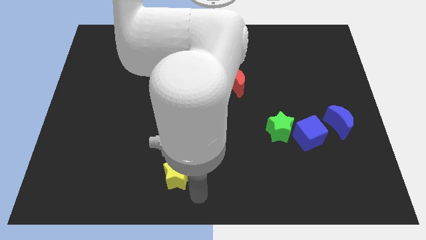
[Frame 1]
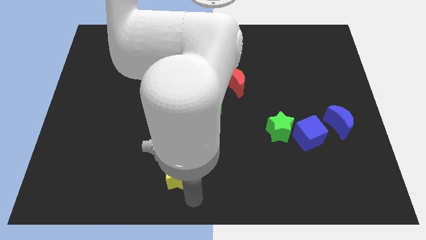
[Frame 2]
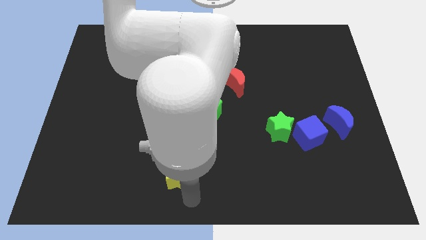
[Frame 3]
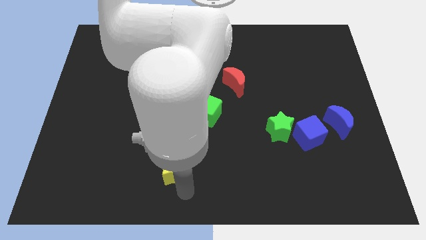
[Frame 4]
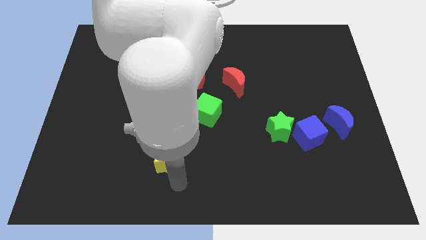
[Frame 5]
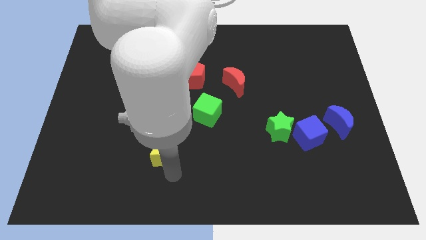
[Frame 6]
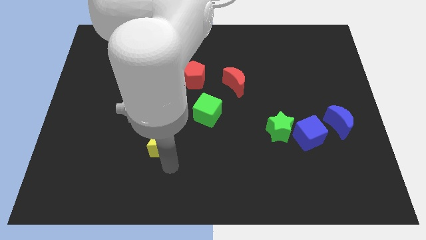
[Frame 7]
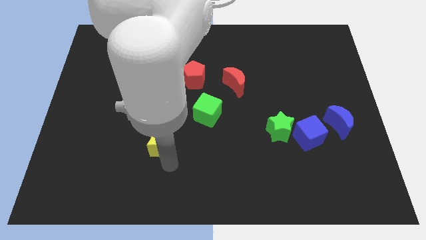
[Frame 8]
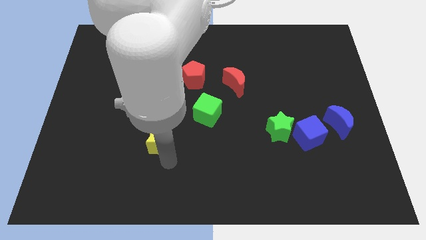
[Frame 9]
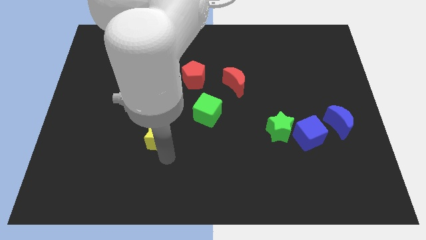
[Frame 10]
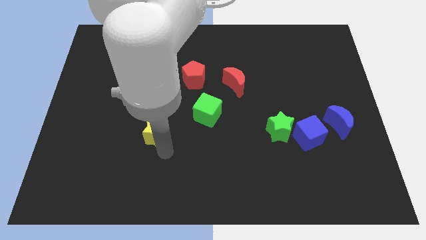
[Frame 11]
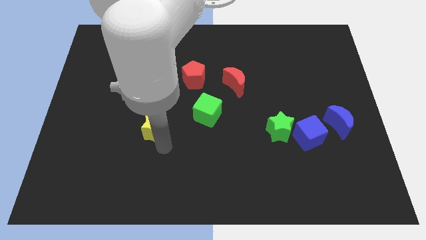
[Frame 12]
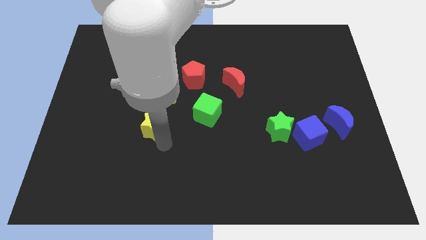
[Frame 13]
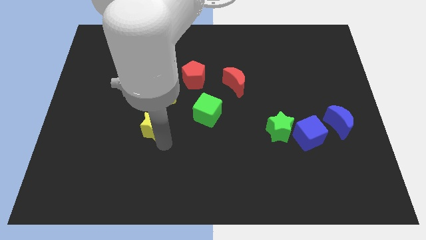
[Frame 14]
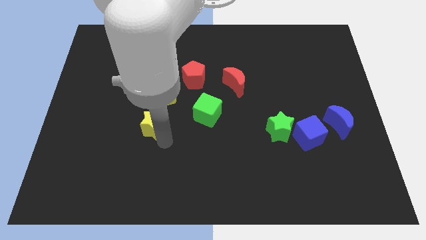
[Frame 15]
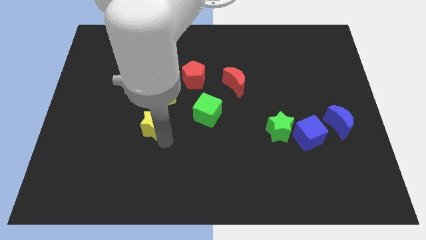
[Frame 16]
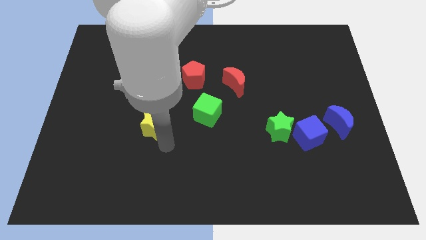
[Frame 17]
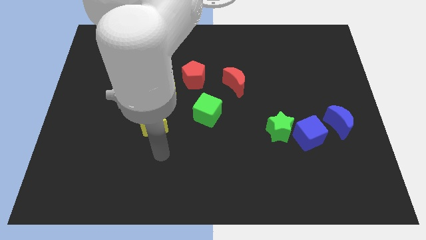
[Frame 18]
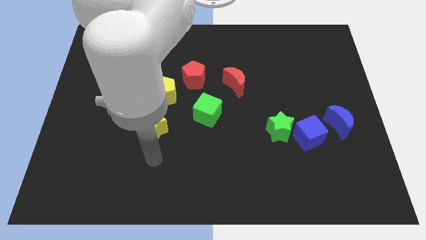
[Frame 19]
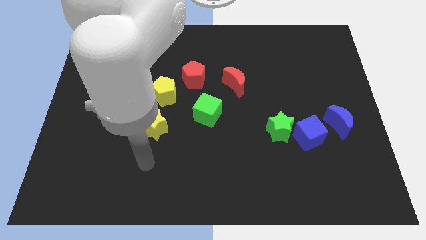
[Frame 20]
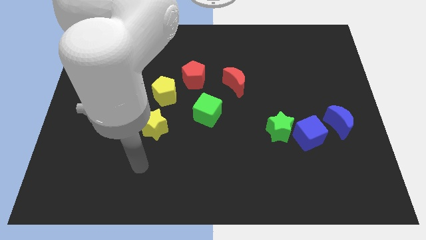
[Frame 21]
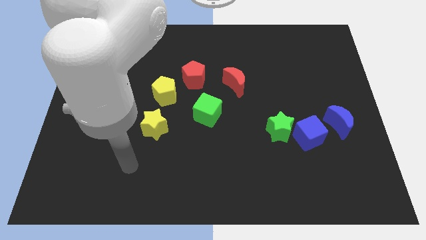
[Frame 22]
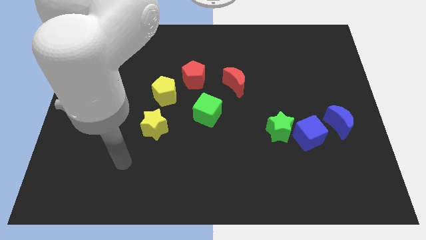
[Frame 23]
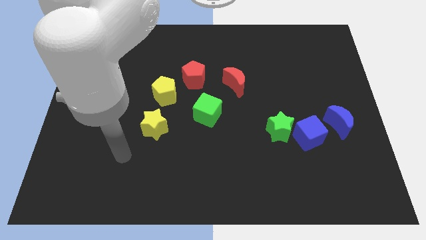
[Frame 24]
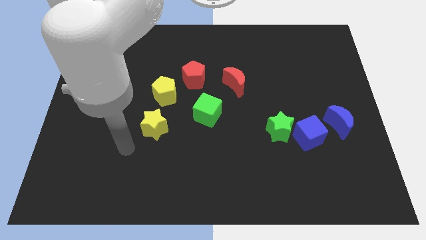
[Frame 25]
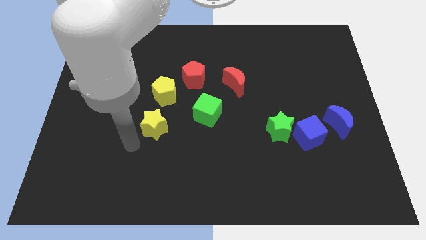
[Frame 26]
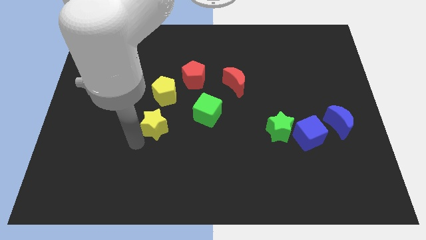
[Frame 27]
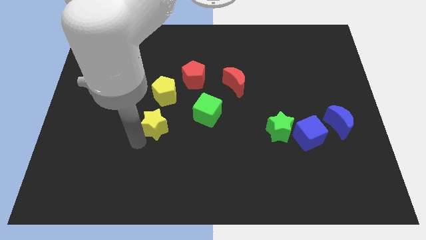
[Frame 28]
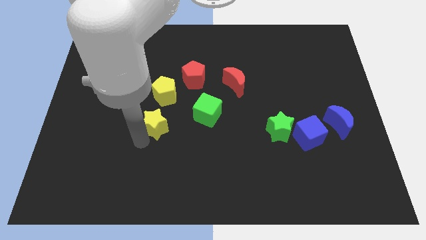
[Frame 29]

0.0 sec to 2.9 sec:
push the yellow star to the center

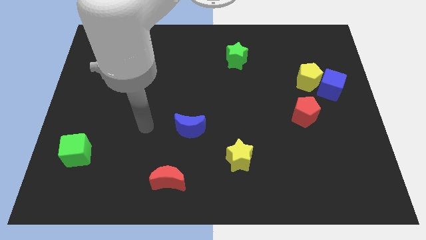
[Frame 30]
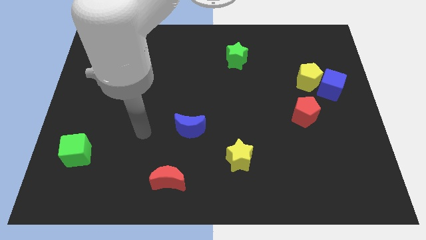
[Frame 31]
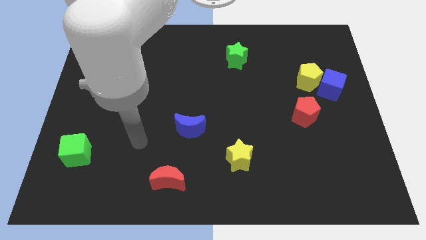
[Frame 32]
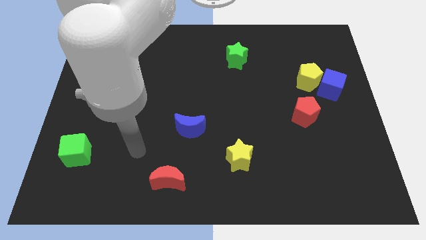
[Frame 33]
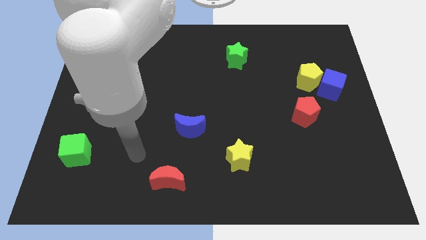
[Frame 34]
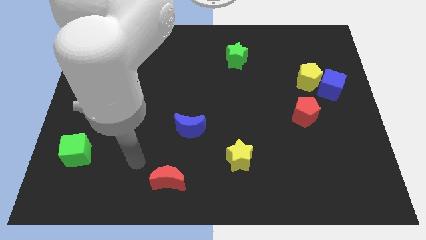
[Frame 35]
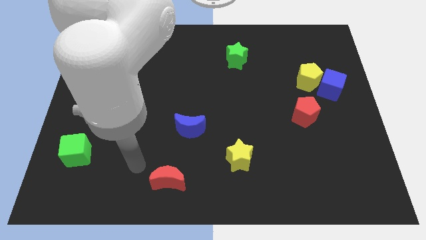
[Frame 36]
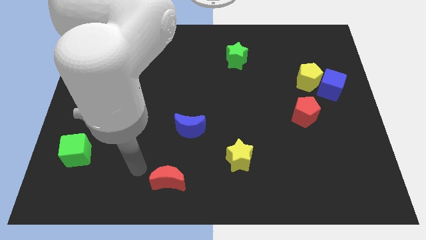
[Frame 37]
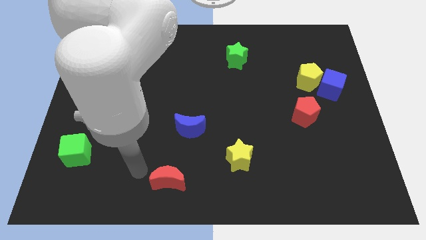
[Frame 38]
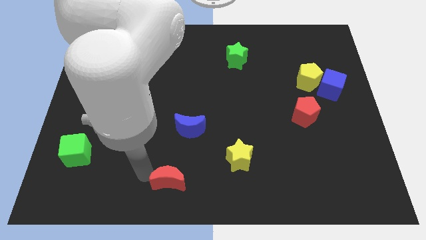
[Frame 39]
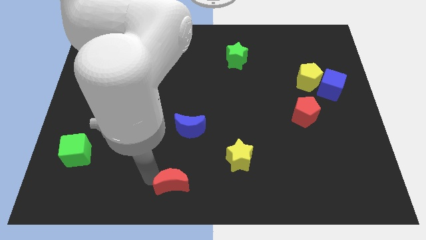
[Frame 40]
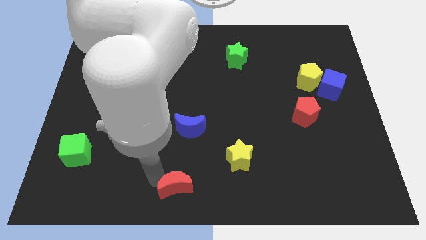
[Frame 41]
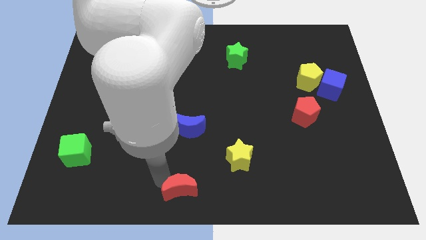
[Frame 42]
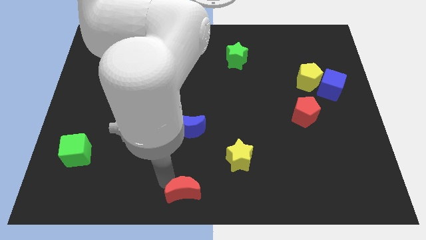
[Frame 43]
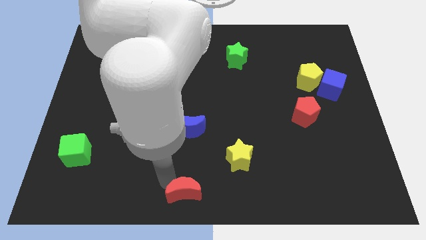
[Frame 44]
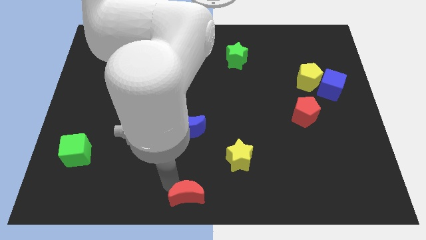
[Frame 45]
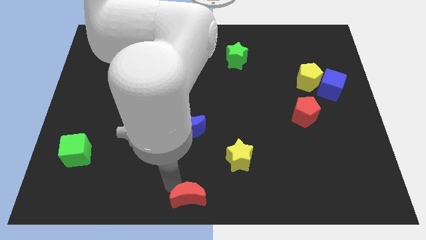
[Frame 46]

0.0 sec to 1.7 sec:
push the red crescent to the bottom of the board

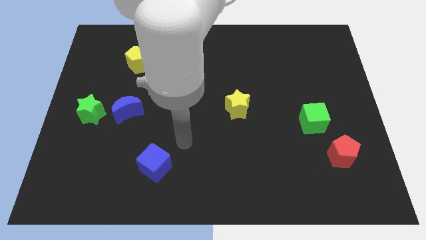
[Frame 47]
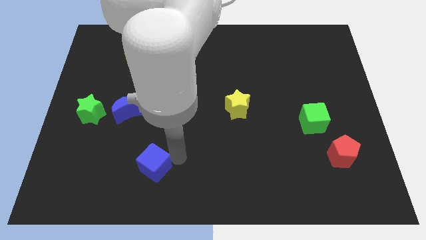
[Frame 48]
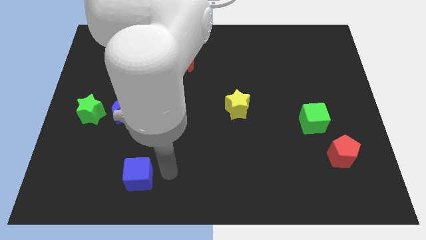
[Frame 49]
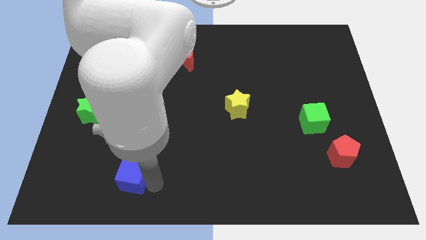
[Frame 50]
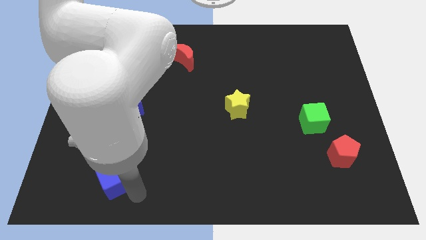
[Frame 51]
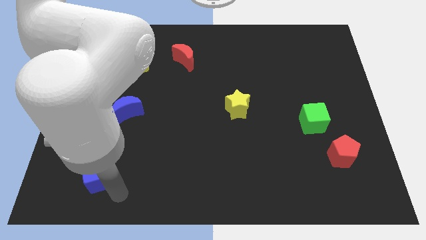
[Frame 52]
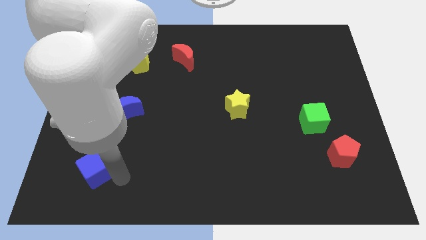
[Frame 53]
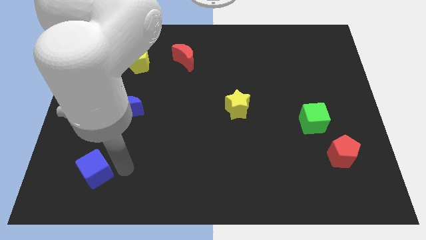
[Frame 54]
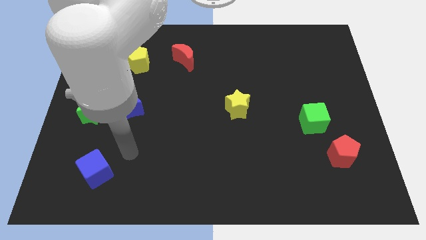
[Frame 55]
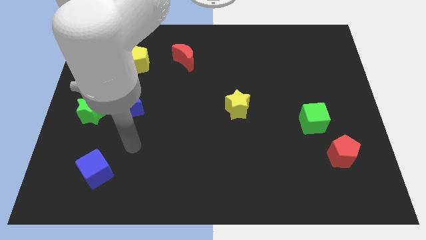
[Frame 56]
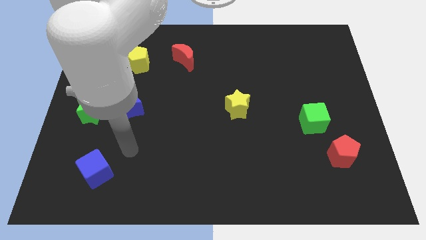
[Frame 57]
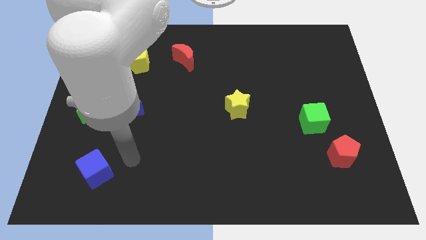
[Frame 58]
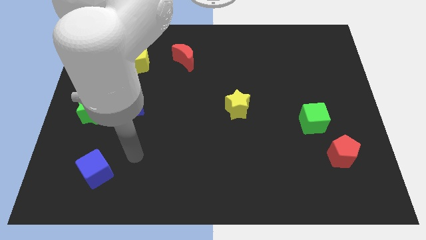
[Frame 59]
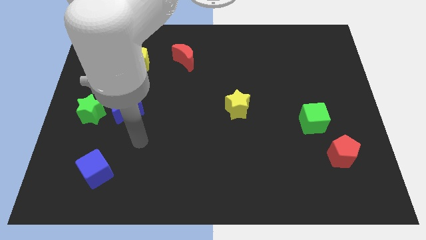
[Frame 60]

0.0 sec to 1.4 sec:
push the blue cube slightly to the left of the board

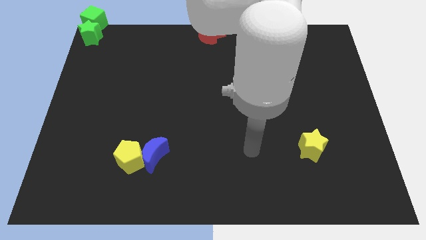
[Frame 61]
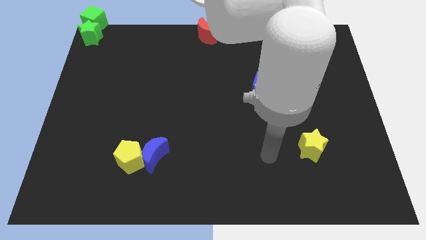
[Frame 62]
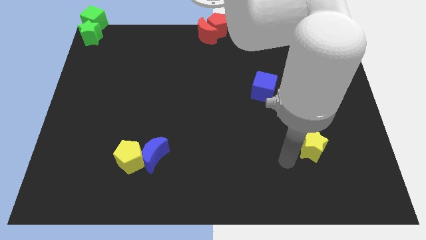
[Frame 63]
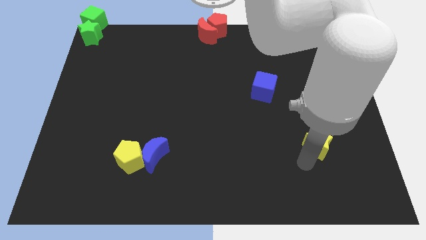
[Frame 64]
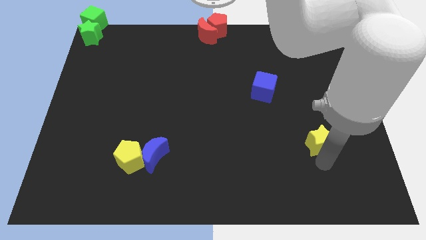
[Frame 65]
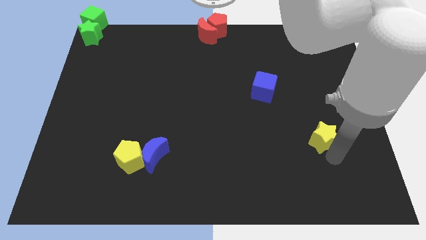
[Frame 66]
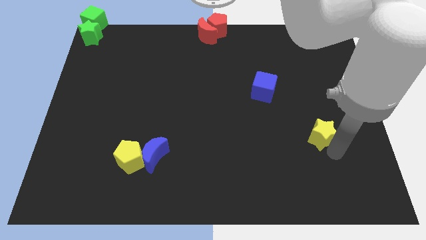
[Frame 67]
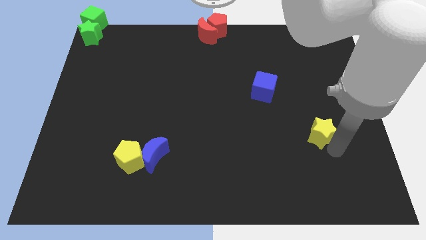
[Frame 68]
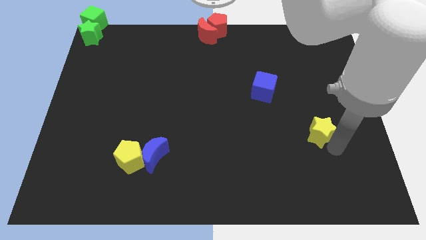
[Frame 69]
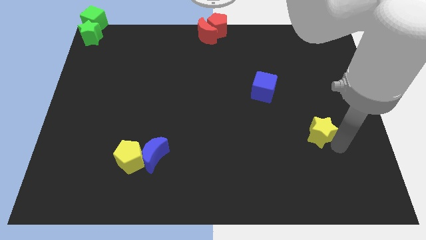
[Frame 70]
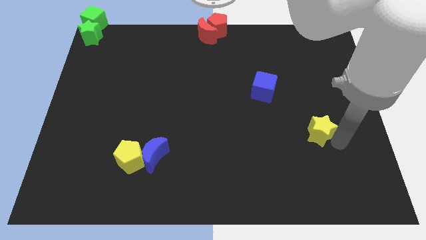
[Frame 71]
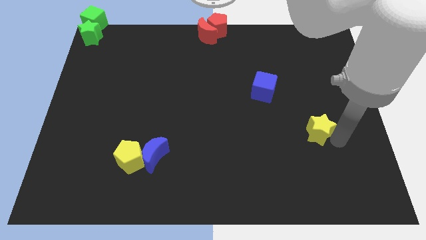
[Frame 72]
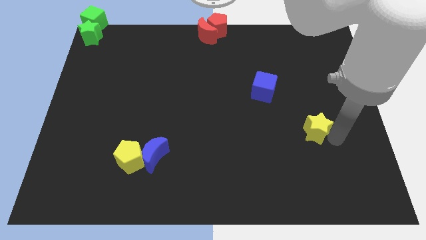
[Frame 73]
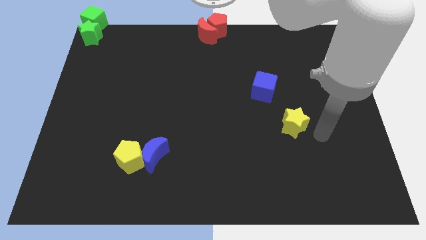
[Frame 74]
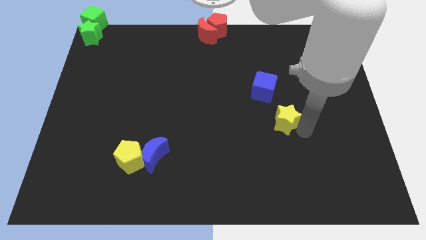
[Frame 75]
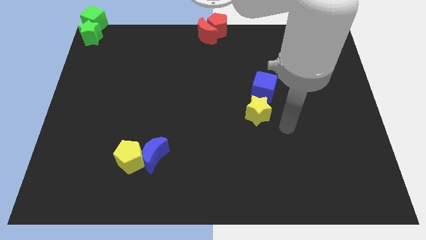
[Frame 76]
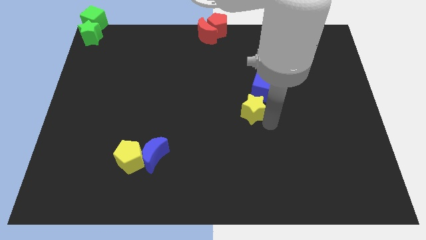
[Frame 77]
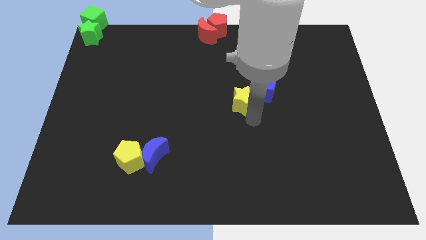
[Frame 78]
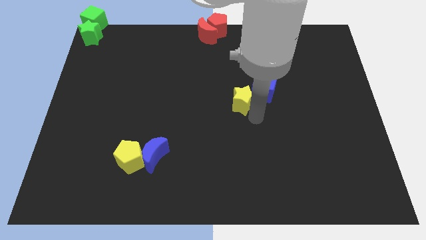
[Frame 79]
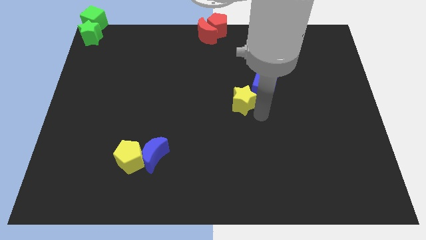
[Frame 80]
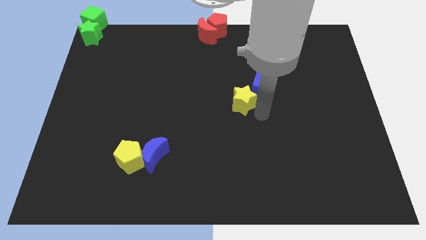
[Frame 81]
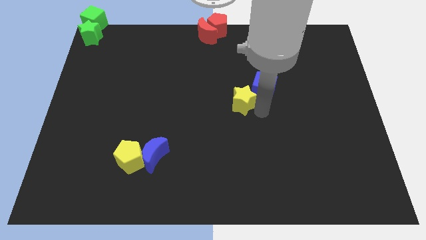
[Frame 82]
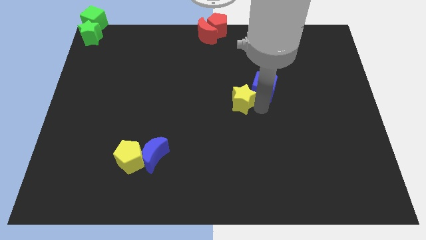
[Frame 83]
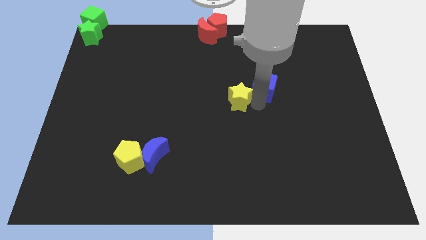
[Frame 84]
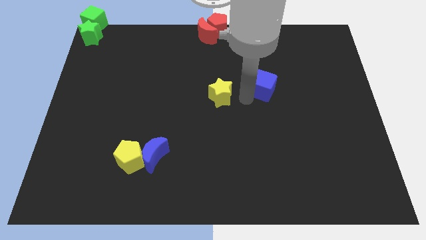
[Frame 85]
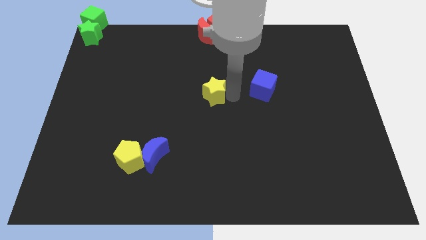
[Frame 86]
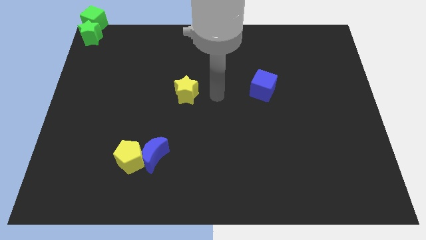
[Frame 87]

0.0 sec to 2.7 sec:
move the yellow star parallel to the left of the blue cube

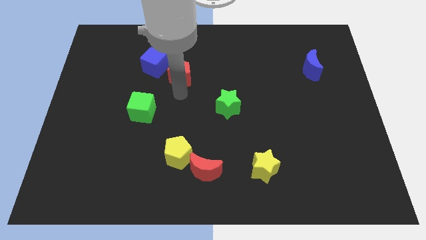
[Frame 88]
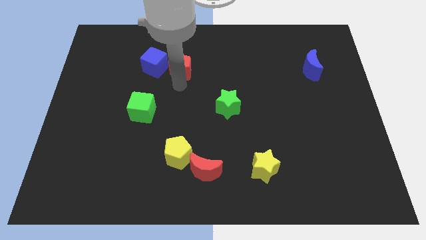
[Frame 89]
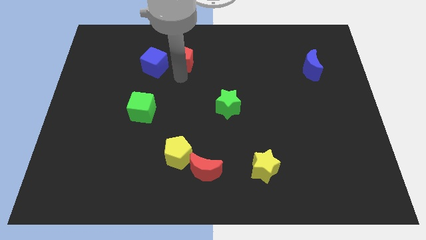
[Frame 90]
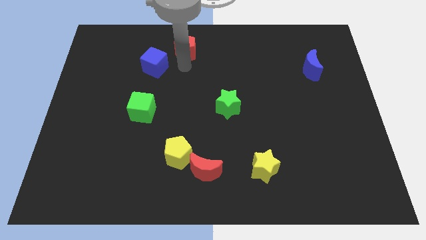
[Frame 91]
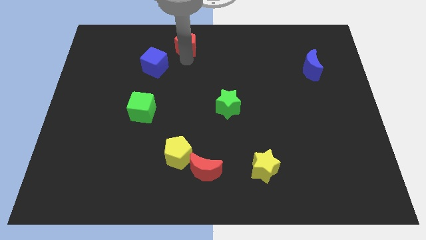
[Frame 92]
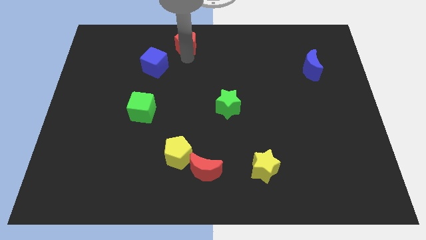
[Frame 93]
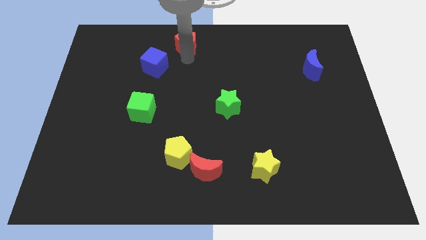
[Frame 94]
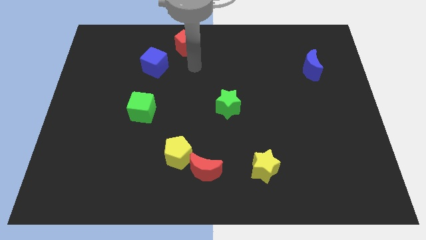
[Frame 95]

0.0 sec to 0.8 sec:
place red pentagon upwards
